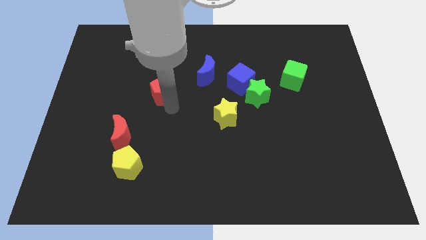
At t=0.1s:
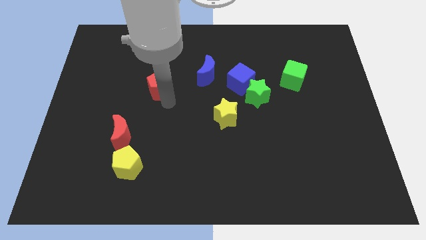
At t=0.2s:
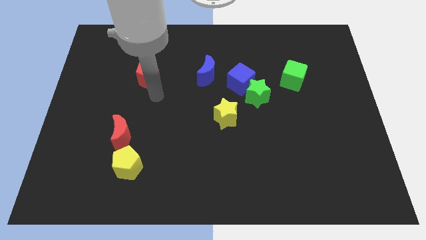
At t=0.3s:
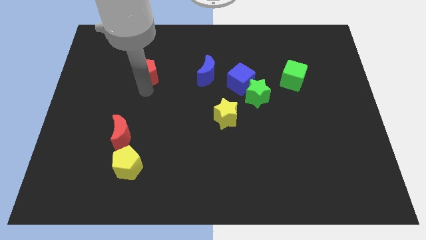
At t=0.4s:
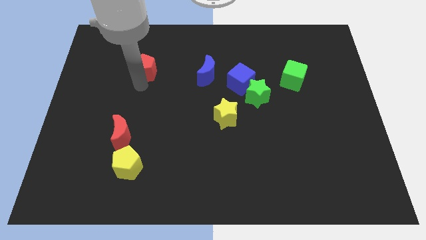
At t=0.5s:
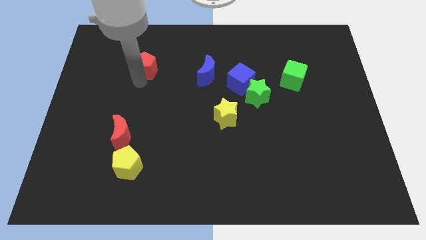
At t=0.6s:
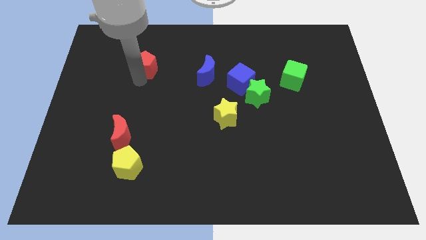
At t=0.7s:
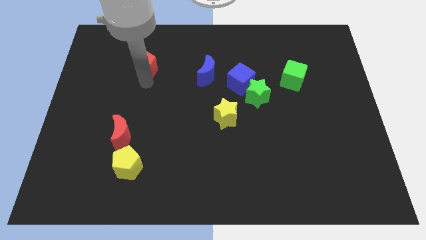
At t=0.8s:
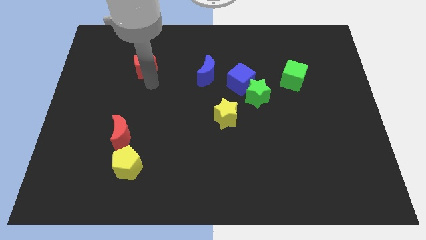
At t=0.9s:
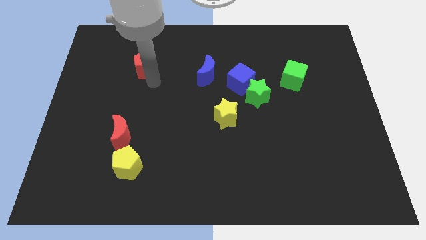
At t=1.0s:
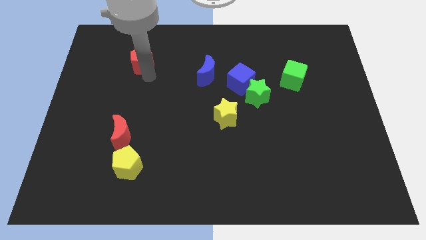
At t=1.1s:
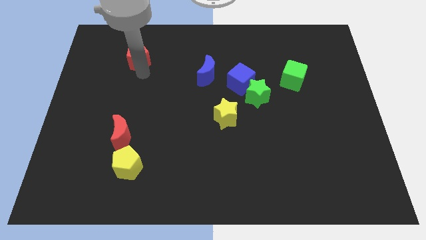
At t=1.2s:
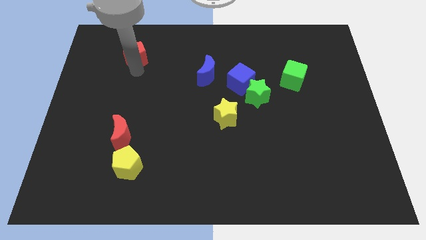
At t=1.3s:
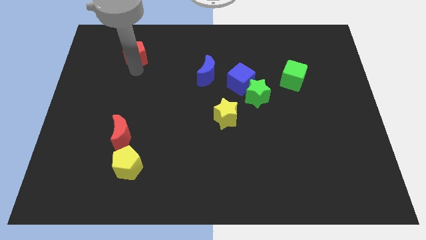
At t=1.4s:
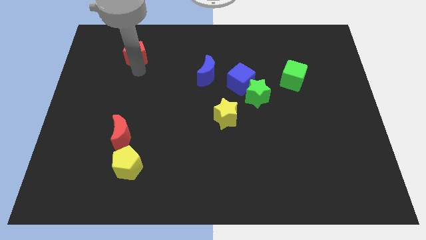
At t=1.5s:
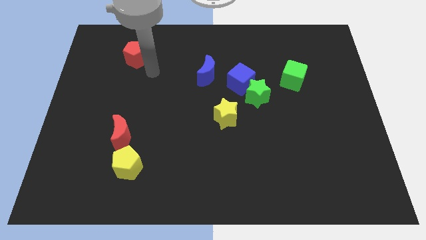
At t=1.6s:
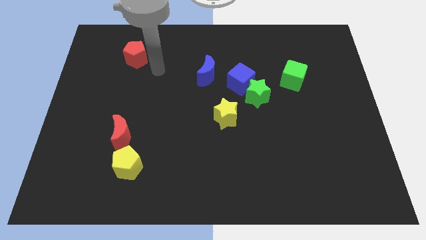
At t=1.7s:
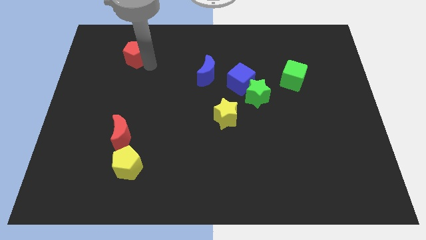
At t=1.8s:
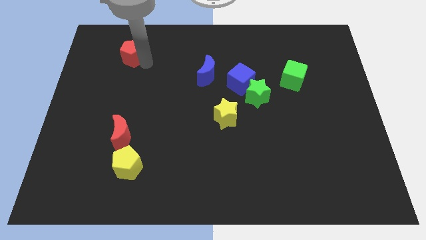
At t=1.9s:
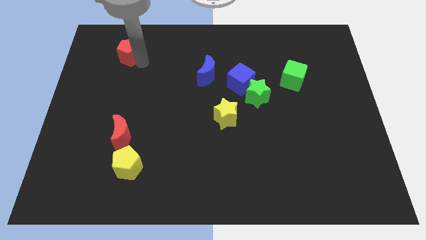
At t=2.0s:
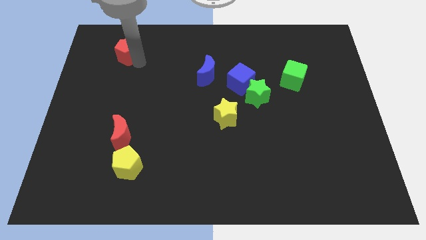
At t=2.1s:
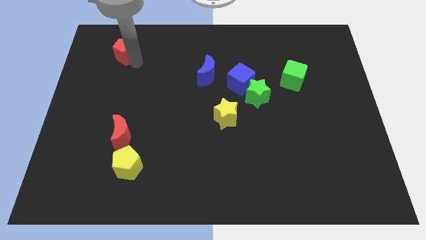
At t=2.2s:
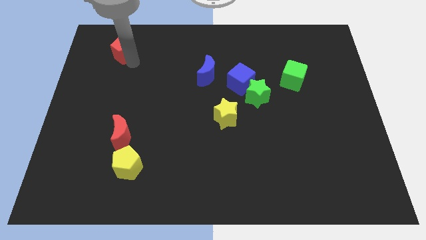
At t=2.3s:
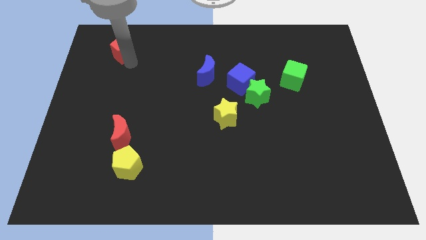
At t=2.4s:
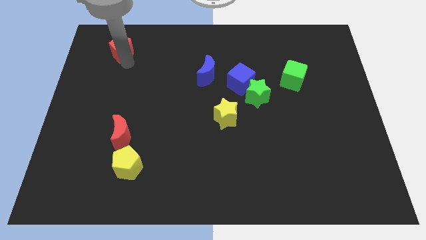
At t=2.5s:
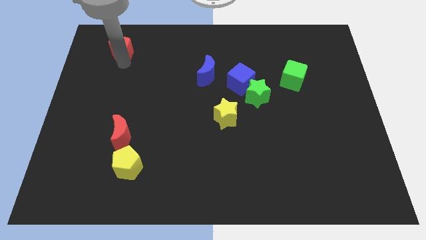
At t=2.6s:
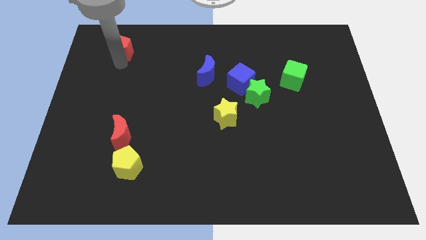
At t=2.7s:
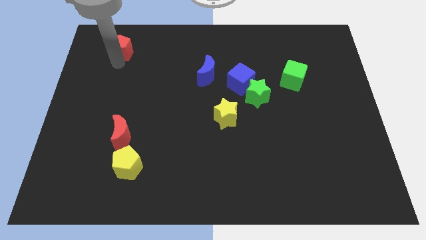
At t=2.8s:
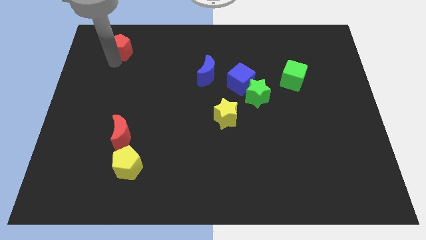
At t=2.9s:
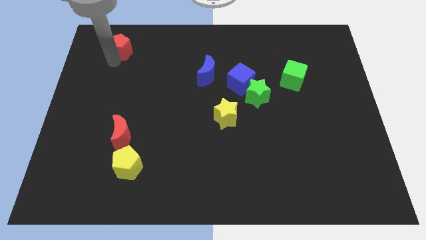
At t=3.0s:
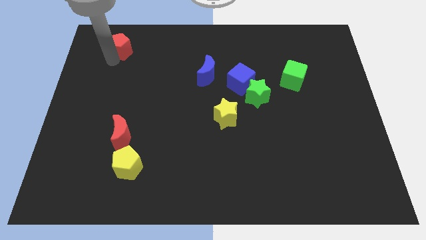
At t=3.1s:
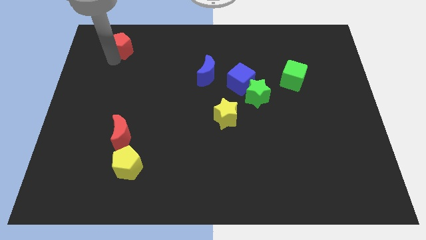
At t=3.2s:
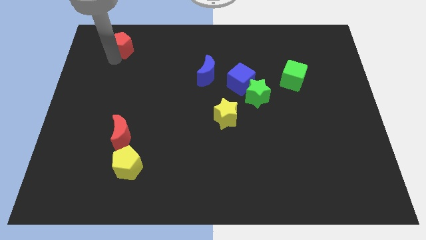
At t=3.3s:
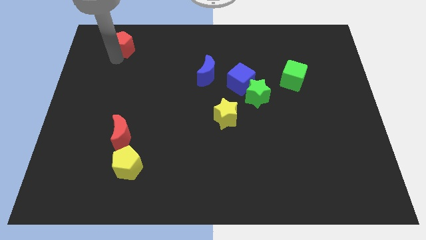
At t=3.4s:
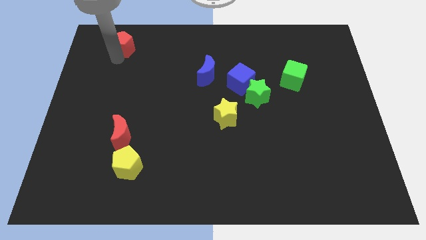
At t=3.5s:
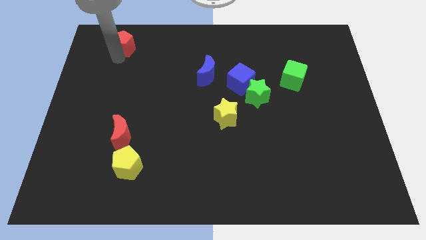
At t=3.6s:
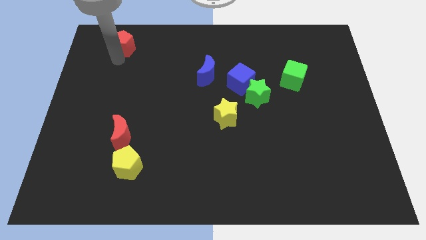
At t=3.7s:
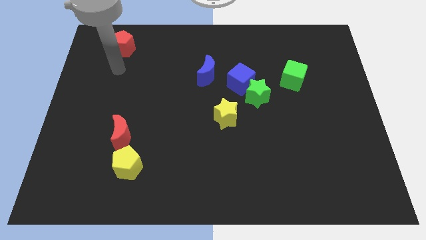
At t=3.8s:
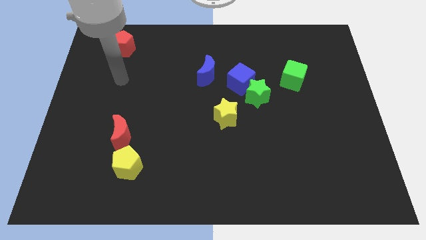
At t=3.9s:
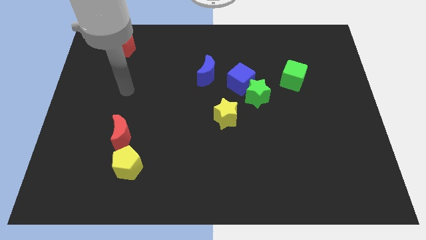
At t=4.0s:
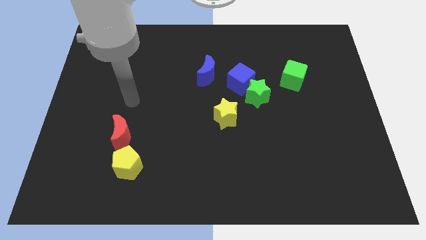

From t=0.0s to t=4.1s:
move the red pentagon to the top

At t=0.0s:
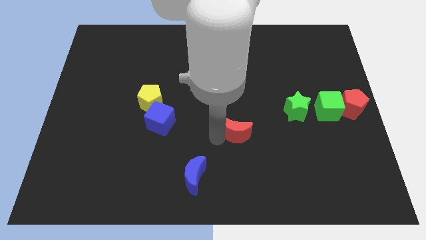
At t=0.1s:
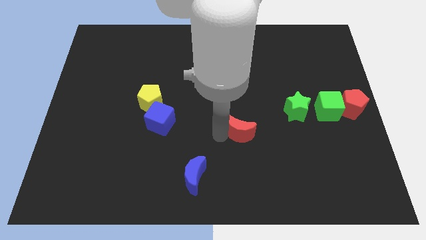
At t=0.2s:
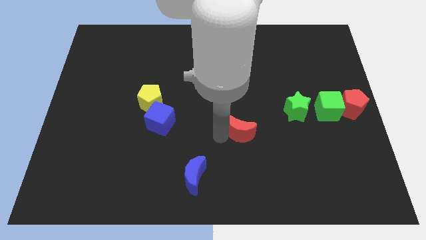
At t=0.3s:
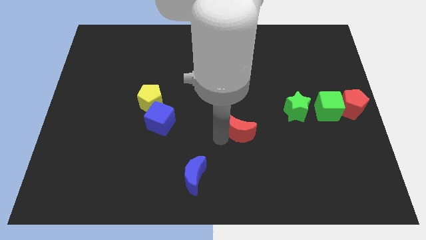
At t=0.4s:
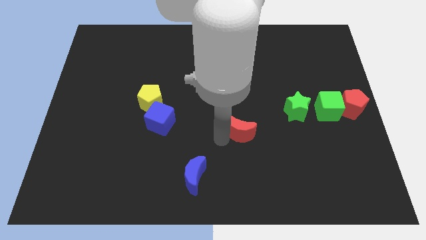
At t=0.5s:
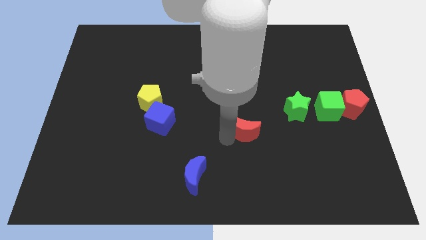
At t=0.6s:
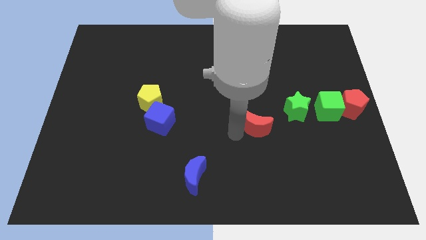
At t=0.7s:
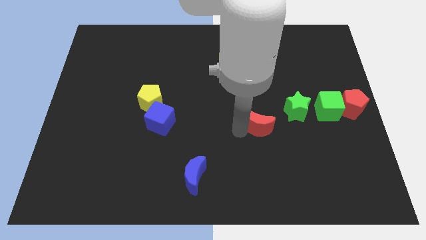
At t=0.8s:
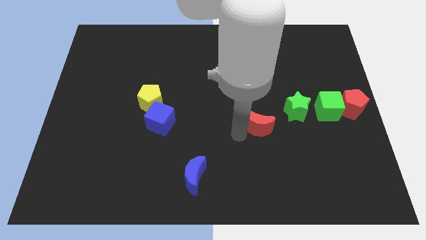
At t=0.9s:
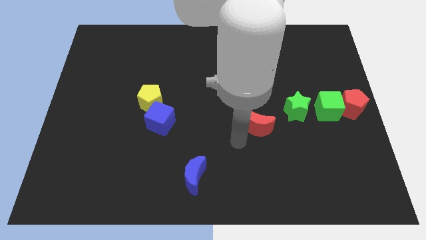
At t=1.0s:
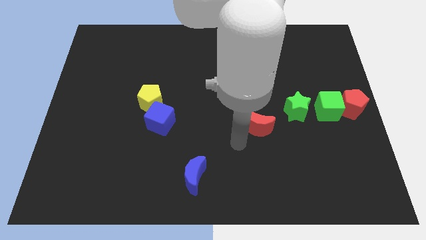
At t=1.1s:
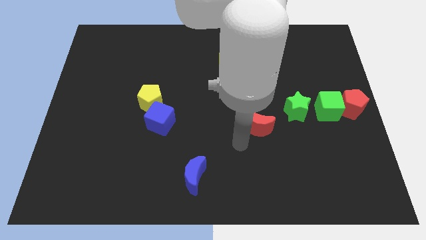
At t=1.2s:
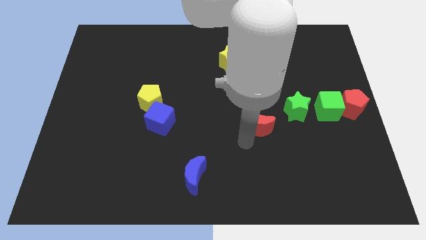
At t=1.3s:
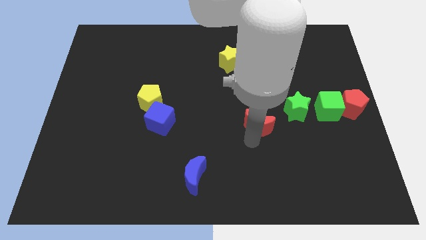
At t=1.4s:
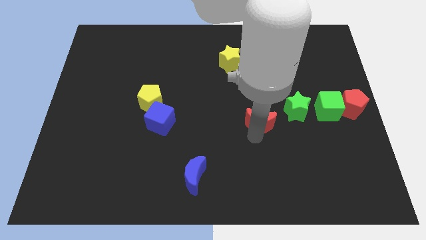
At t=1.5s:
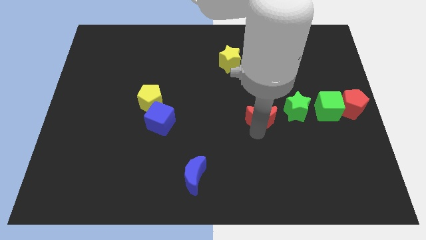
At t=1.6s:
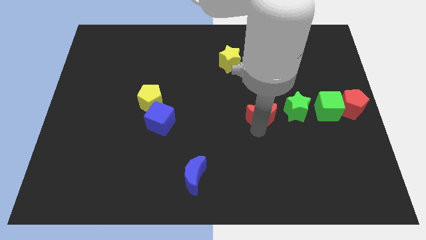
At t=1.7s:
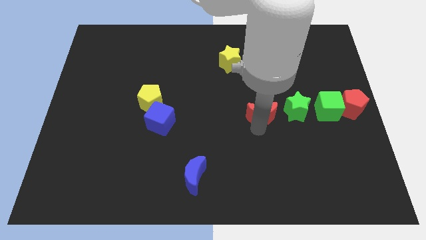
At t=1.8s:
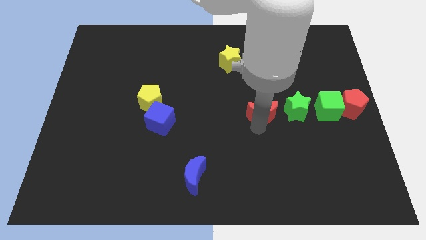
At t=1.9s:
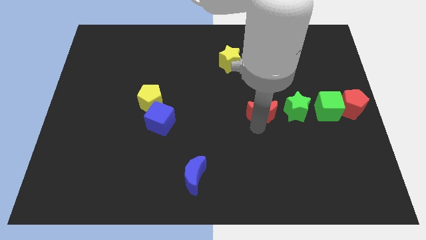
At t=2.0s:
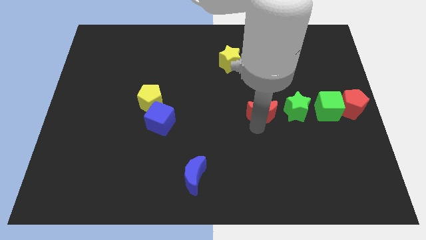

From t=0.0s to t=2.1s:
put the red moon left to the green star

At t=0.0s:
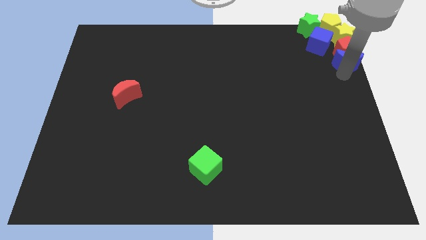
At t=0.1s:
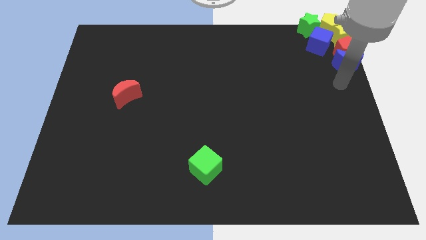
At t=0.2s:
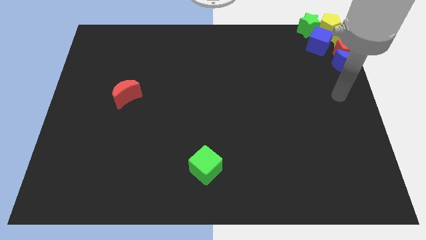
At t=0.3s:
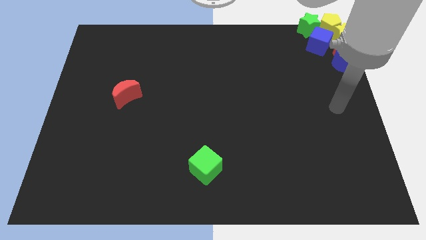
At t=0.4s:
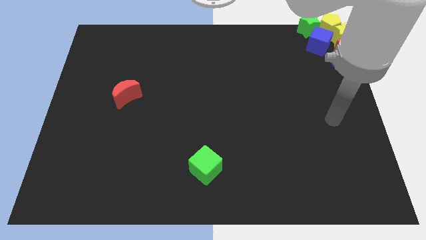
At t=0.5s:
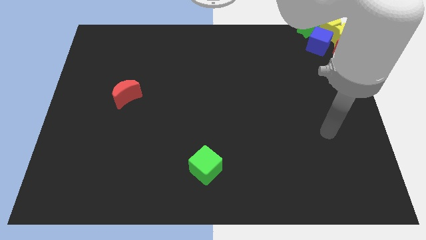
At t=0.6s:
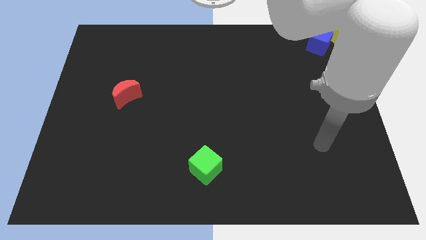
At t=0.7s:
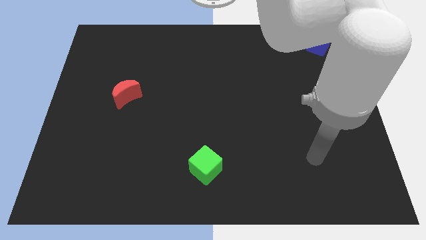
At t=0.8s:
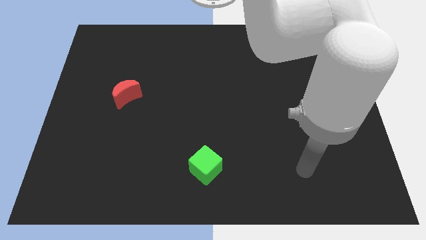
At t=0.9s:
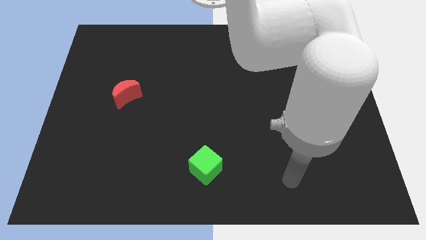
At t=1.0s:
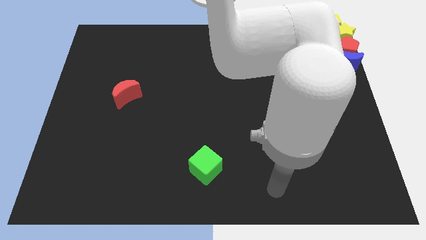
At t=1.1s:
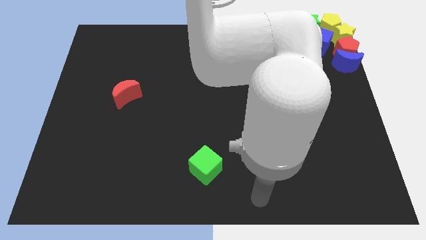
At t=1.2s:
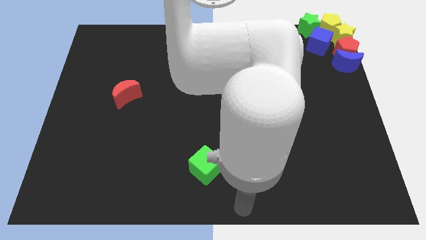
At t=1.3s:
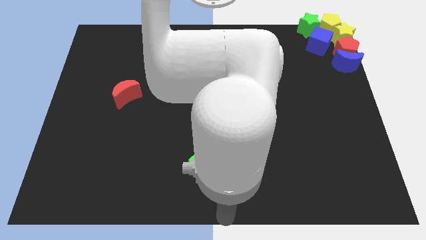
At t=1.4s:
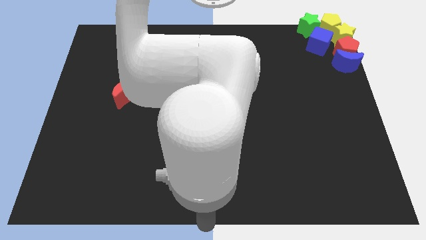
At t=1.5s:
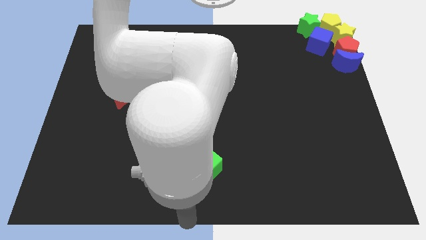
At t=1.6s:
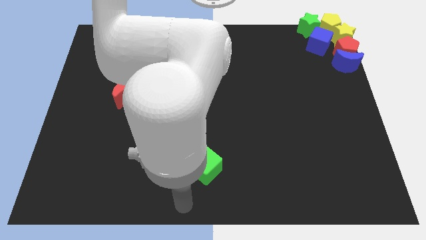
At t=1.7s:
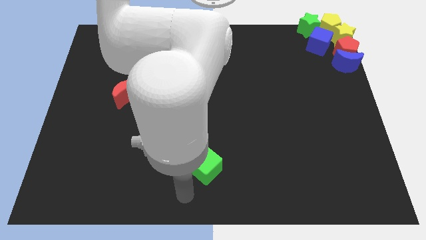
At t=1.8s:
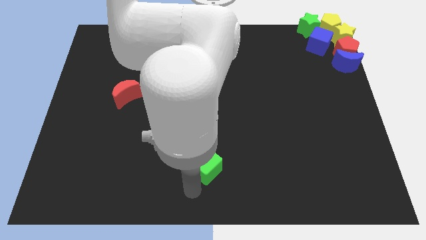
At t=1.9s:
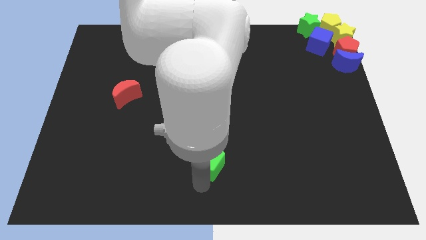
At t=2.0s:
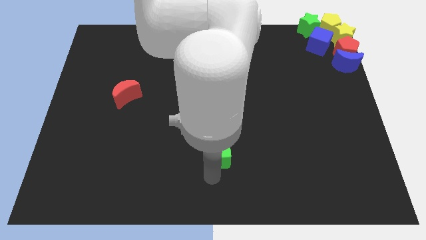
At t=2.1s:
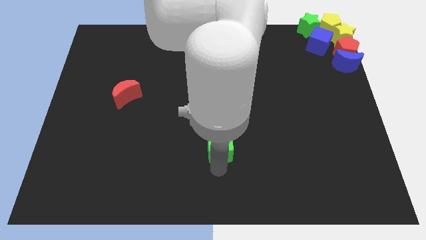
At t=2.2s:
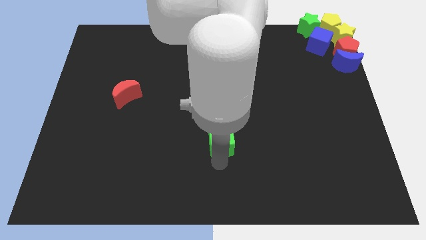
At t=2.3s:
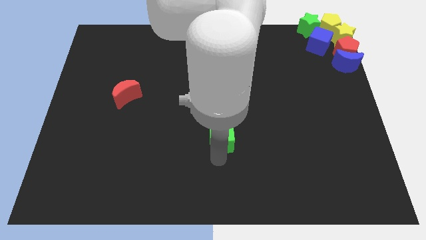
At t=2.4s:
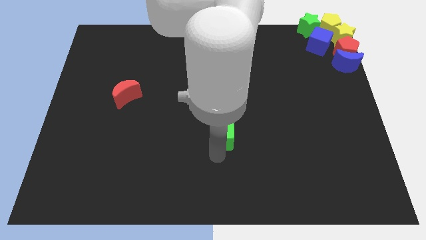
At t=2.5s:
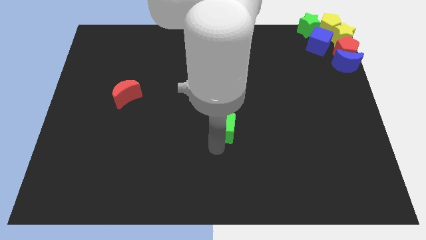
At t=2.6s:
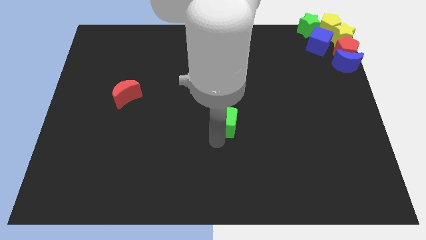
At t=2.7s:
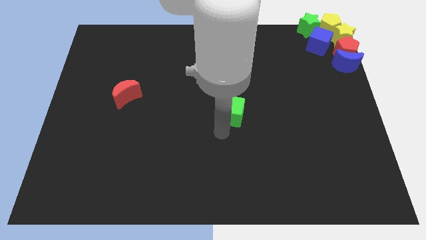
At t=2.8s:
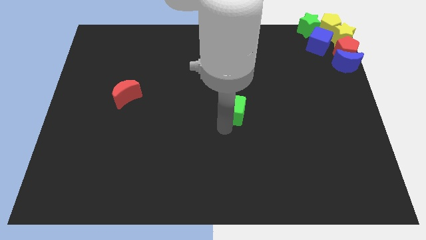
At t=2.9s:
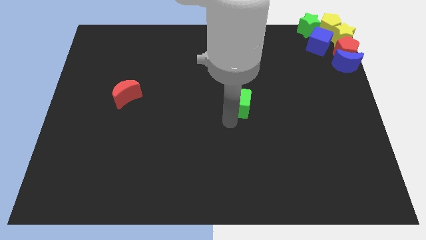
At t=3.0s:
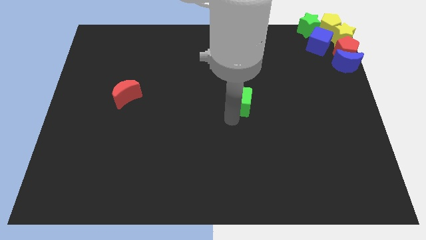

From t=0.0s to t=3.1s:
move your arm away from the blue moon
